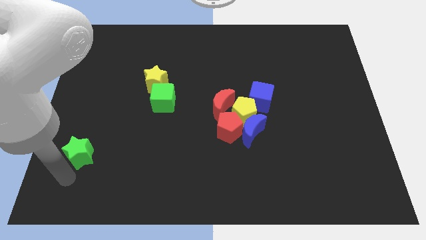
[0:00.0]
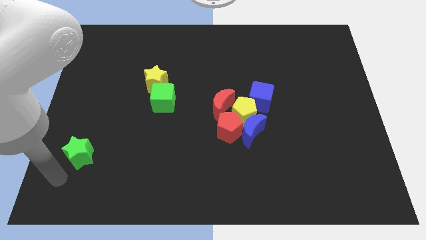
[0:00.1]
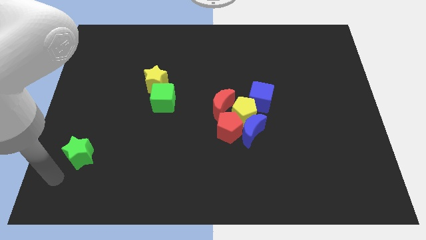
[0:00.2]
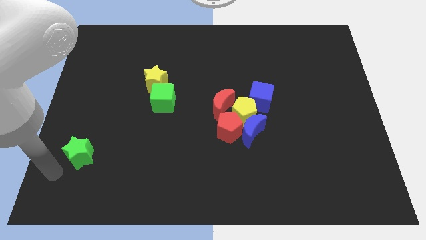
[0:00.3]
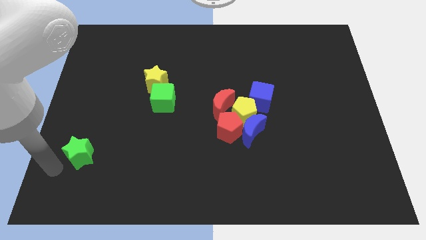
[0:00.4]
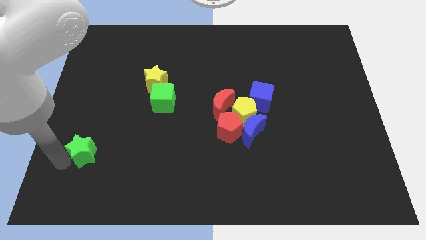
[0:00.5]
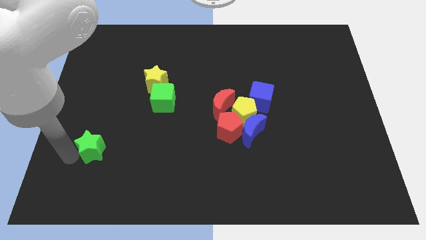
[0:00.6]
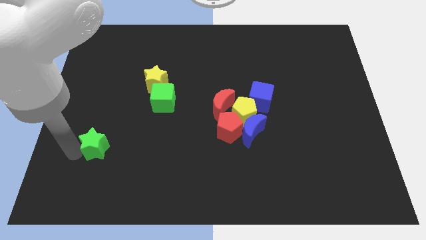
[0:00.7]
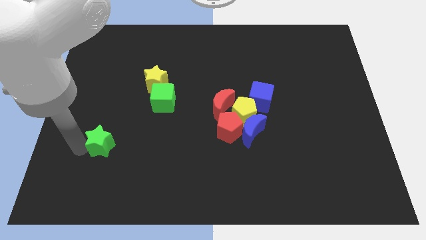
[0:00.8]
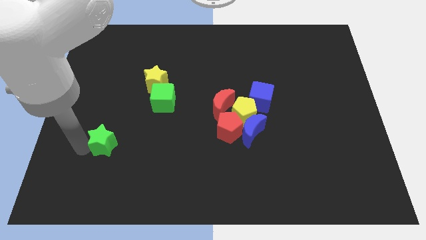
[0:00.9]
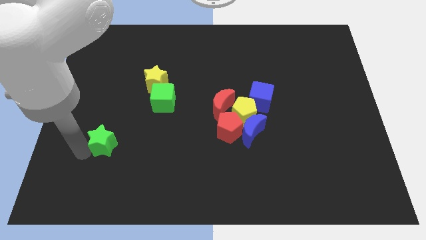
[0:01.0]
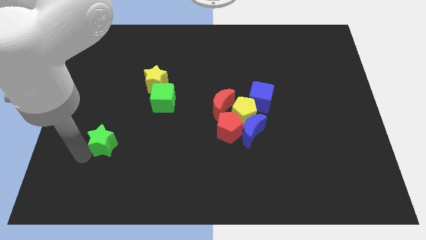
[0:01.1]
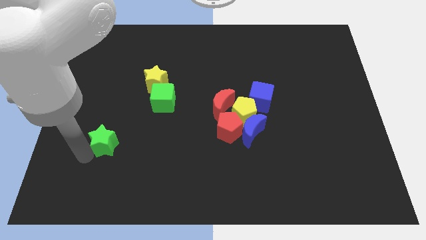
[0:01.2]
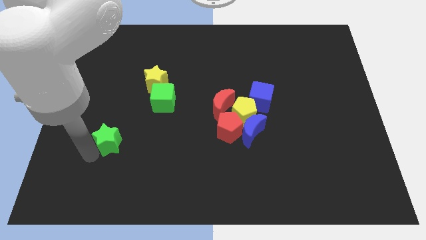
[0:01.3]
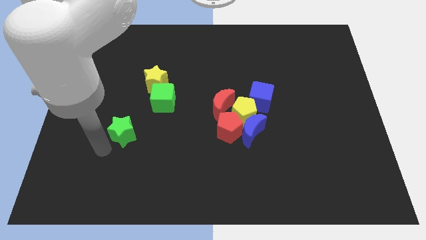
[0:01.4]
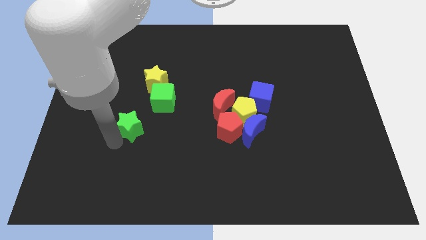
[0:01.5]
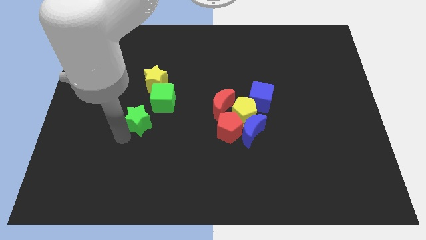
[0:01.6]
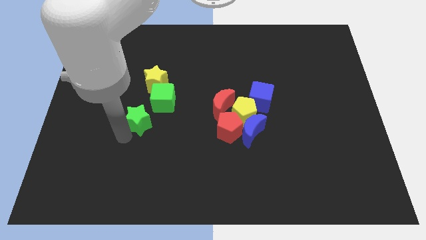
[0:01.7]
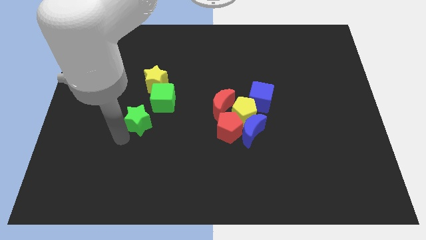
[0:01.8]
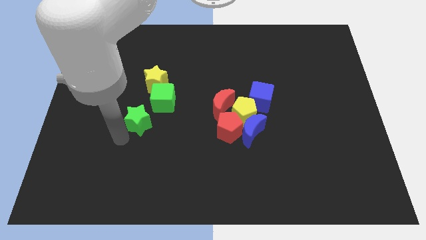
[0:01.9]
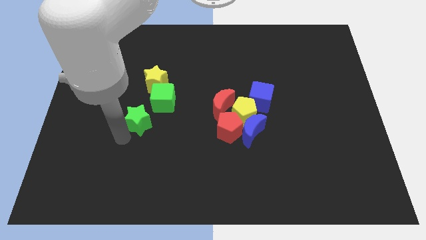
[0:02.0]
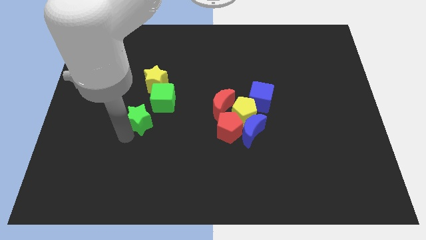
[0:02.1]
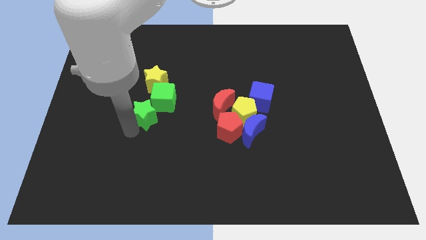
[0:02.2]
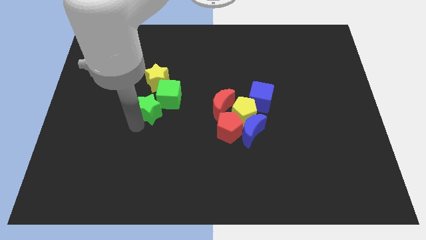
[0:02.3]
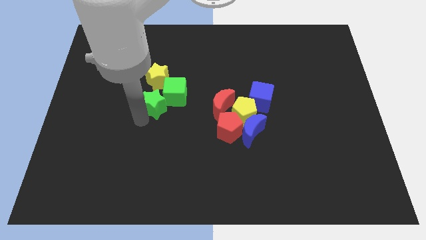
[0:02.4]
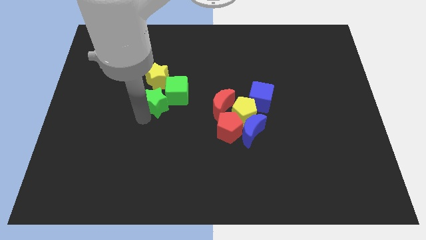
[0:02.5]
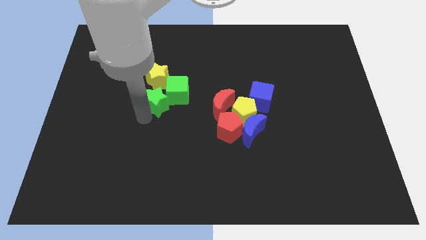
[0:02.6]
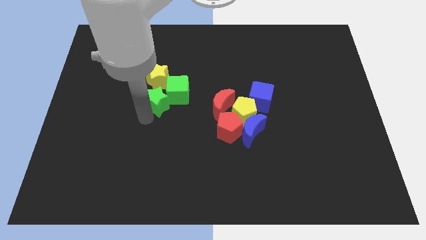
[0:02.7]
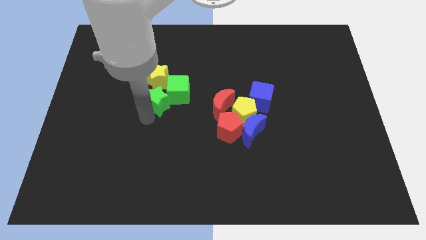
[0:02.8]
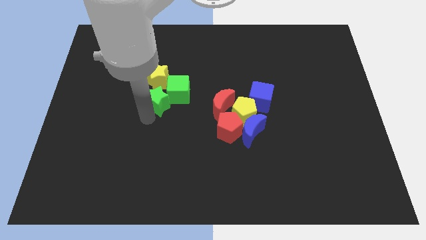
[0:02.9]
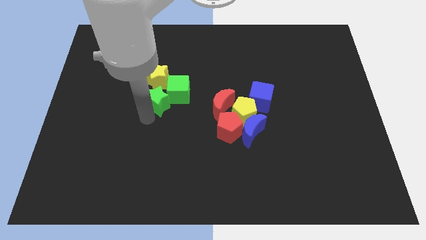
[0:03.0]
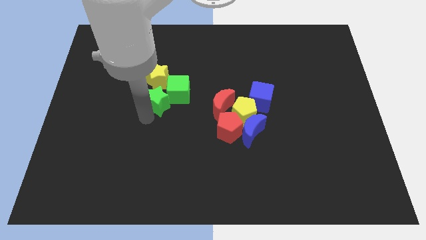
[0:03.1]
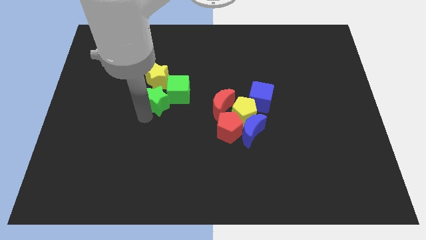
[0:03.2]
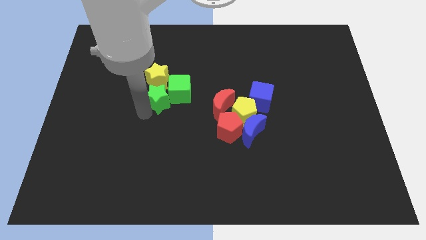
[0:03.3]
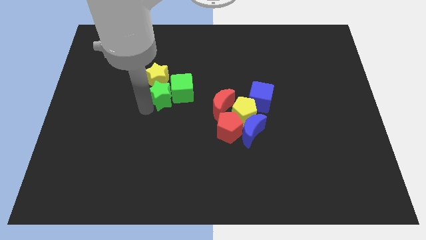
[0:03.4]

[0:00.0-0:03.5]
push the green star below the yellow star

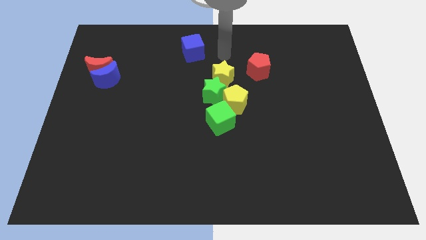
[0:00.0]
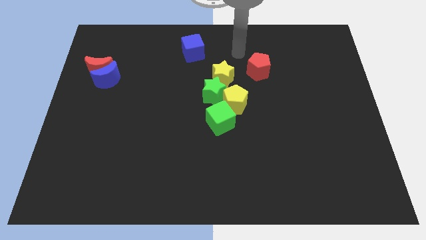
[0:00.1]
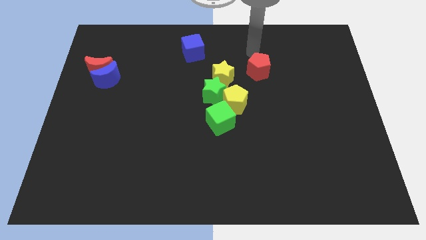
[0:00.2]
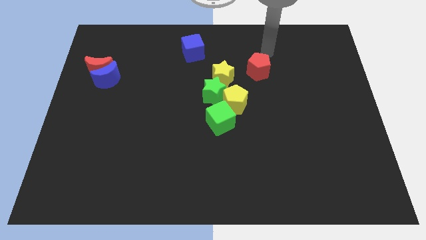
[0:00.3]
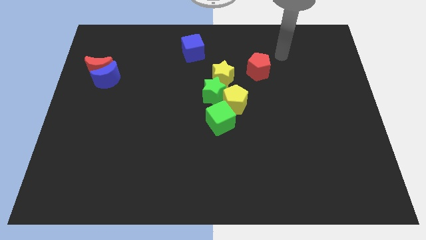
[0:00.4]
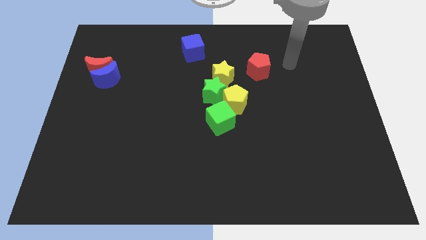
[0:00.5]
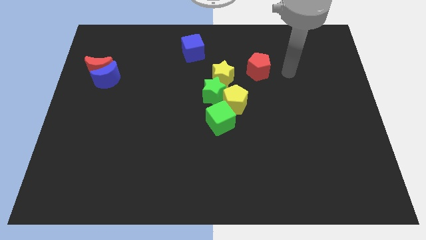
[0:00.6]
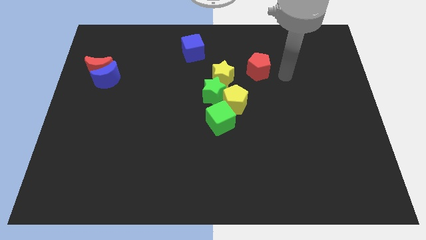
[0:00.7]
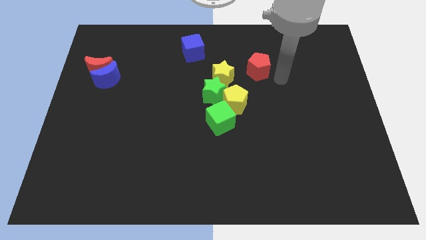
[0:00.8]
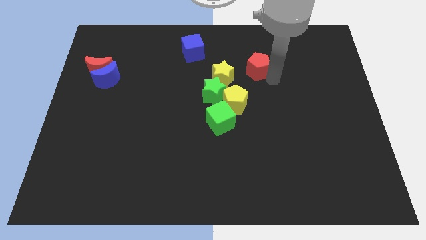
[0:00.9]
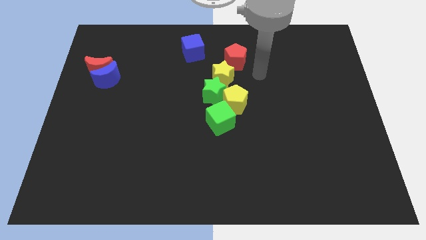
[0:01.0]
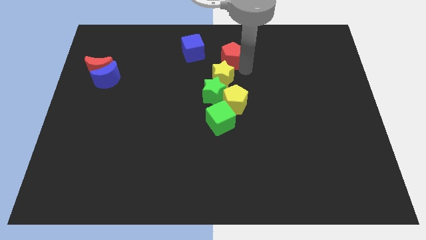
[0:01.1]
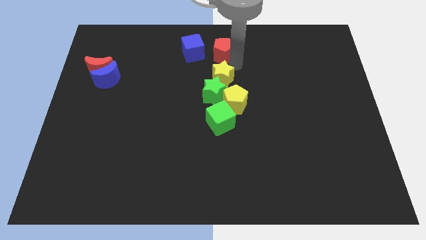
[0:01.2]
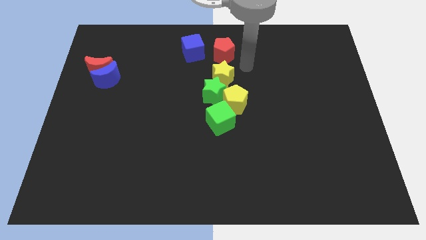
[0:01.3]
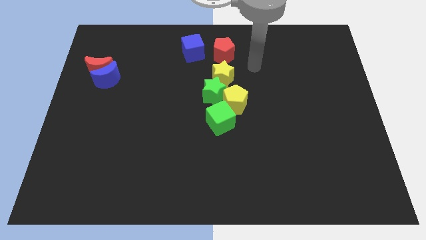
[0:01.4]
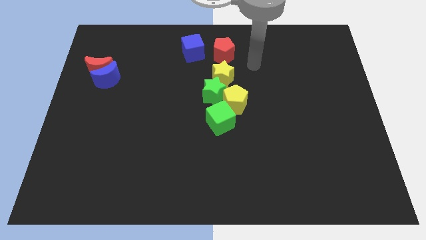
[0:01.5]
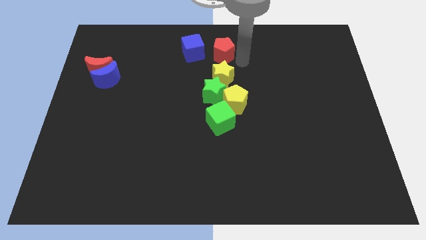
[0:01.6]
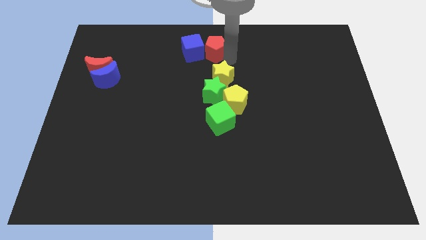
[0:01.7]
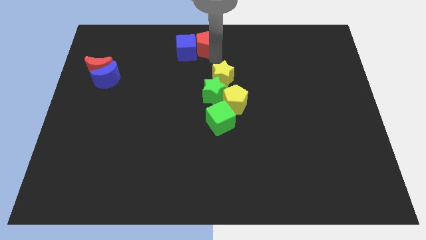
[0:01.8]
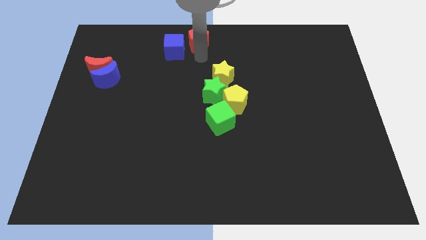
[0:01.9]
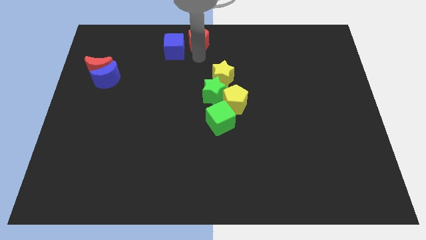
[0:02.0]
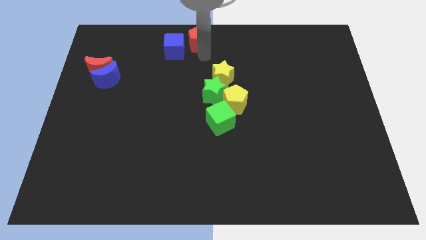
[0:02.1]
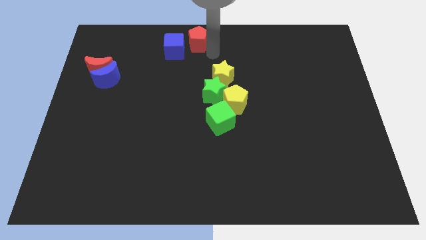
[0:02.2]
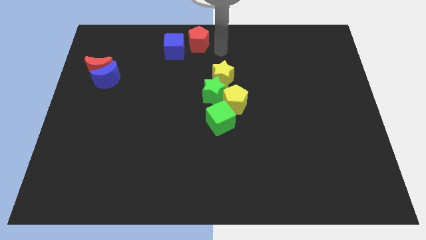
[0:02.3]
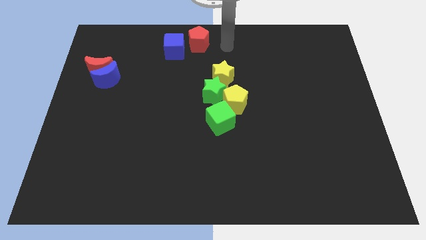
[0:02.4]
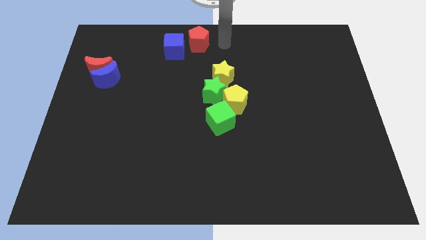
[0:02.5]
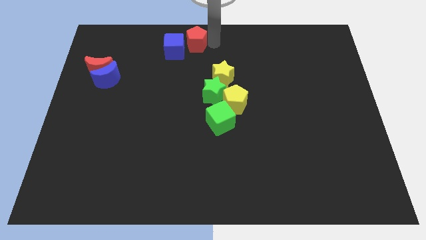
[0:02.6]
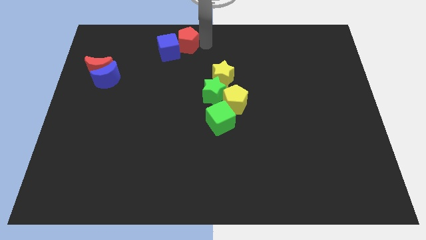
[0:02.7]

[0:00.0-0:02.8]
push the red pentagon into the blue cube to the left

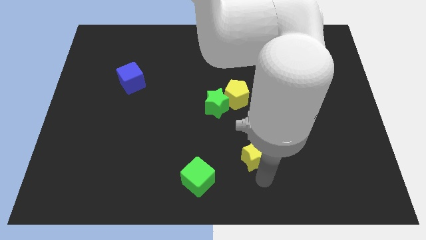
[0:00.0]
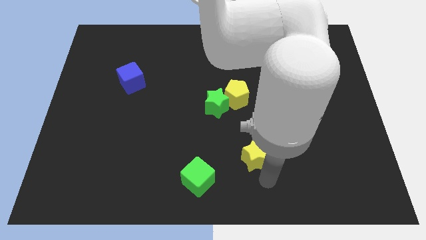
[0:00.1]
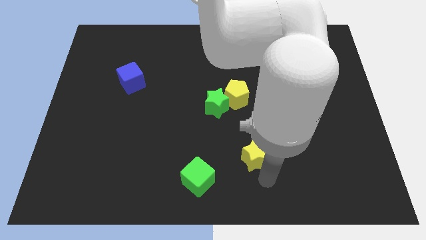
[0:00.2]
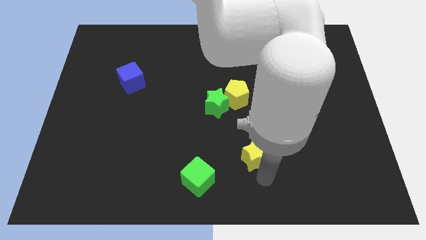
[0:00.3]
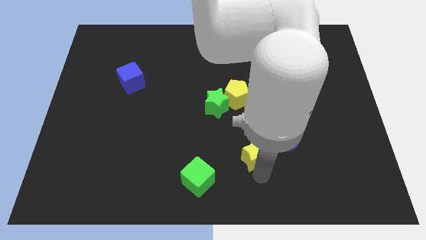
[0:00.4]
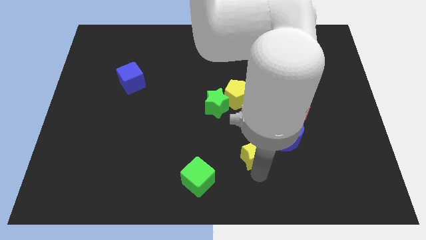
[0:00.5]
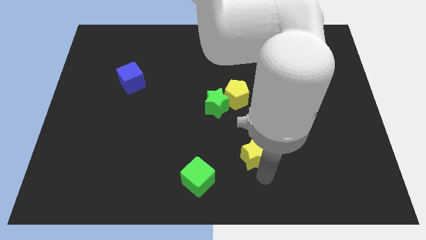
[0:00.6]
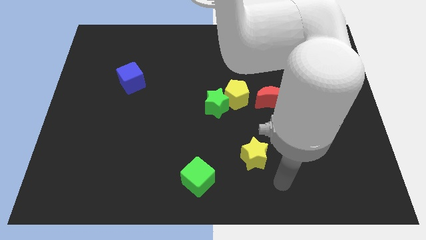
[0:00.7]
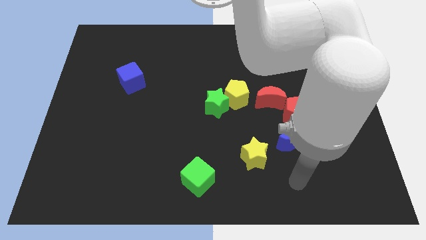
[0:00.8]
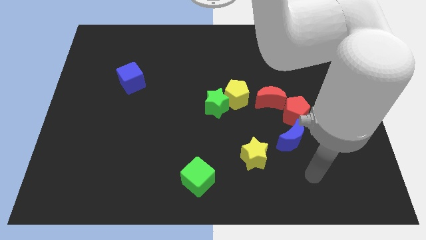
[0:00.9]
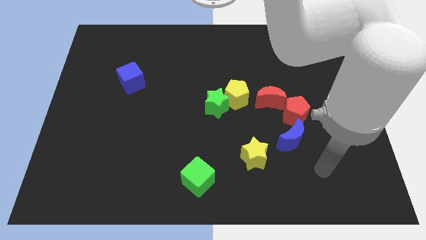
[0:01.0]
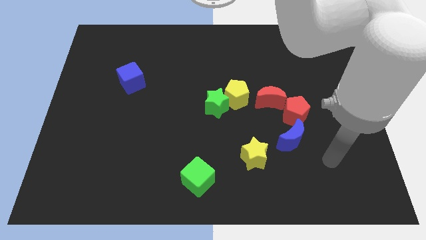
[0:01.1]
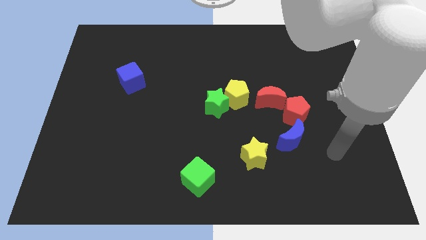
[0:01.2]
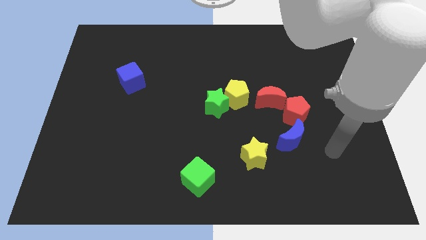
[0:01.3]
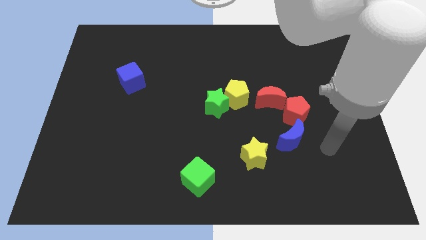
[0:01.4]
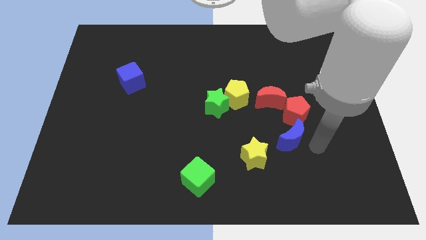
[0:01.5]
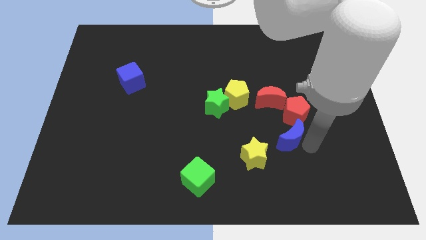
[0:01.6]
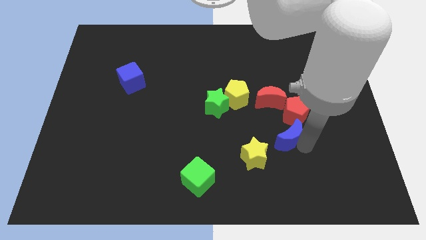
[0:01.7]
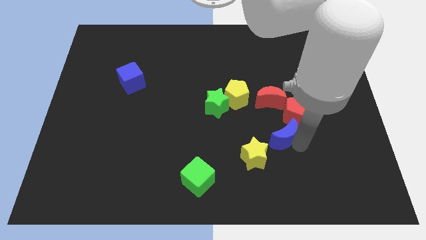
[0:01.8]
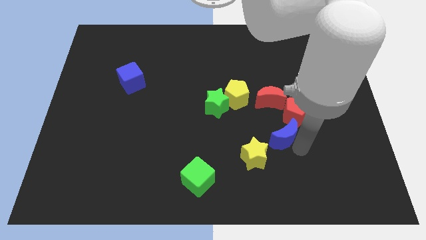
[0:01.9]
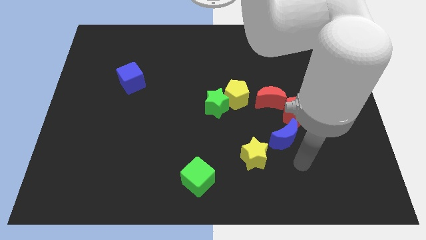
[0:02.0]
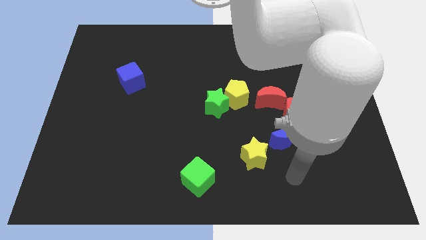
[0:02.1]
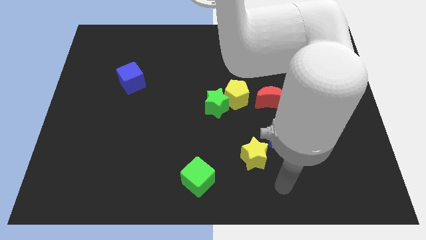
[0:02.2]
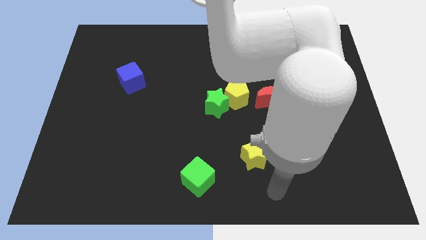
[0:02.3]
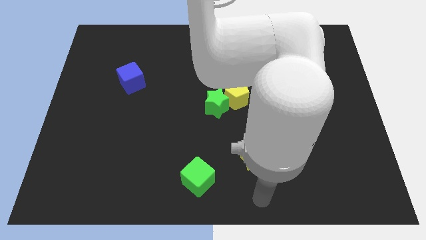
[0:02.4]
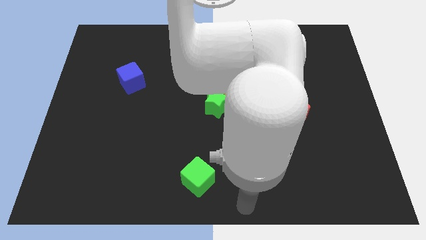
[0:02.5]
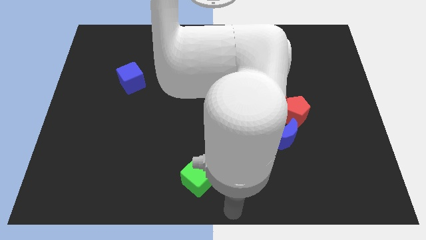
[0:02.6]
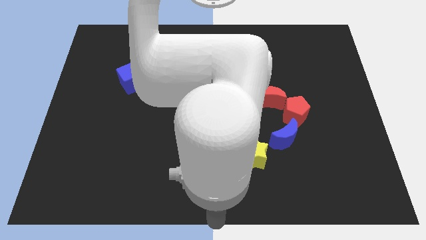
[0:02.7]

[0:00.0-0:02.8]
push the blue crescent in between the red pentagon and yellow star
